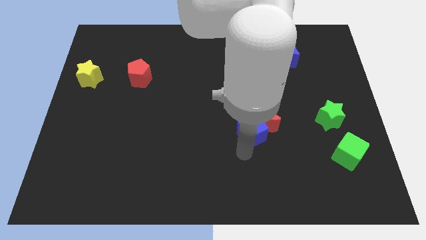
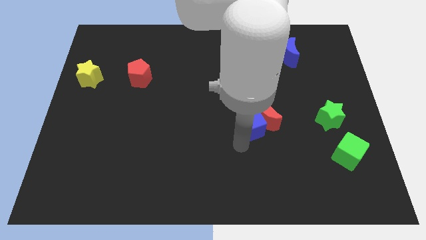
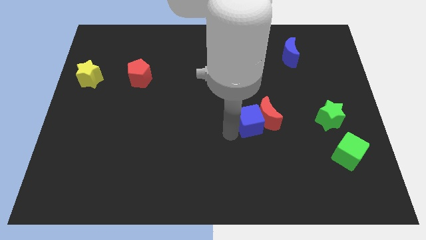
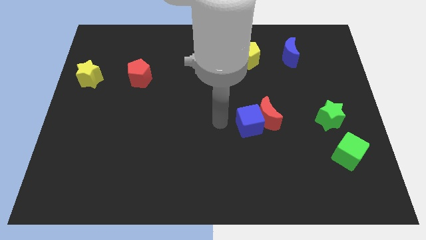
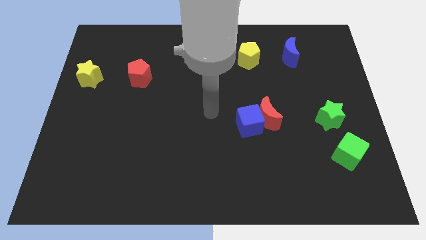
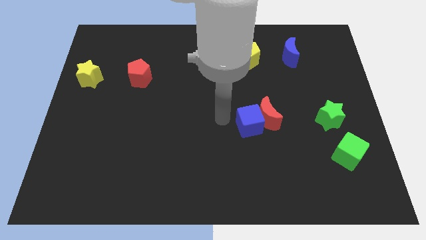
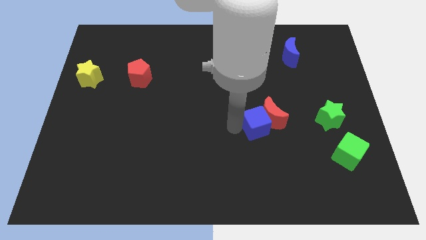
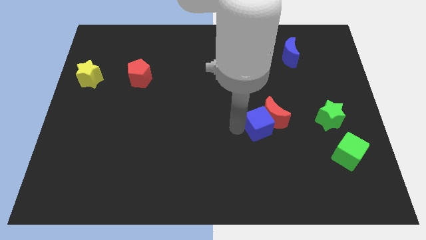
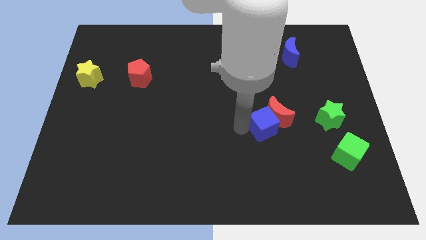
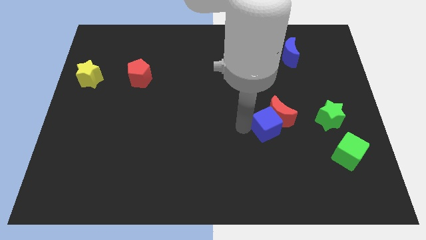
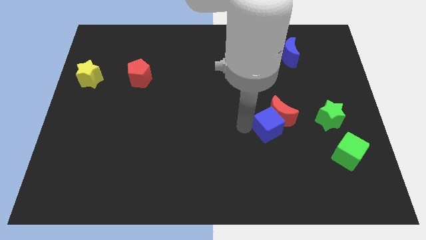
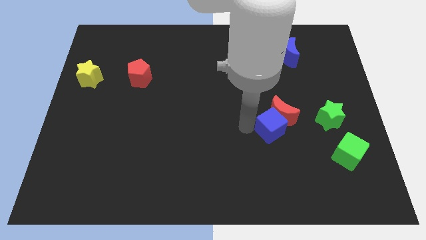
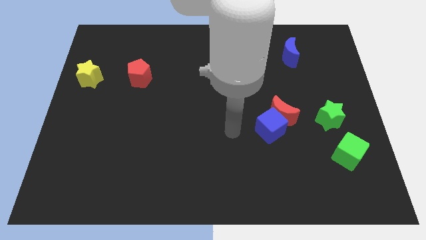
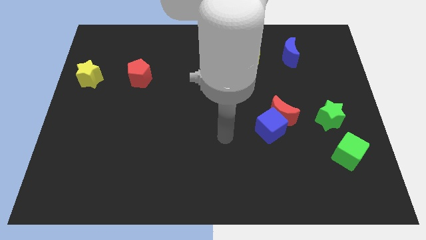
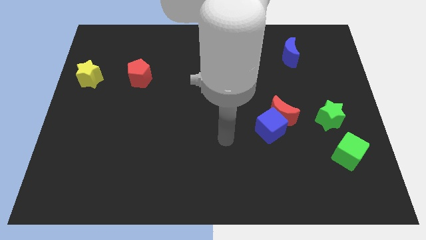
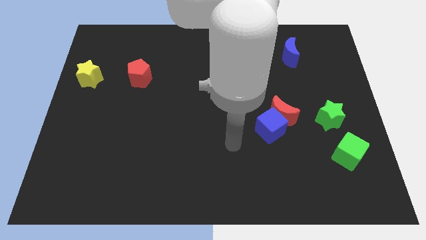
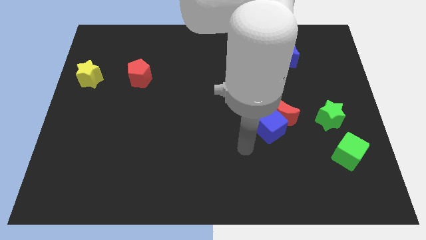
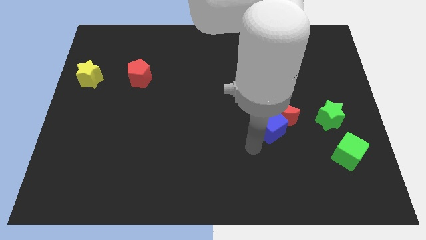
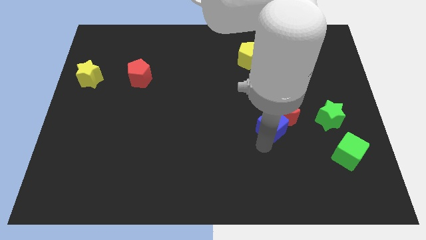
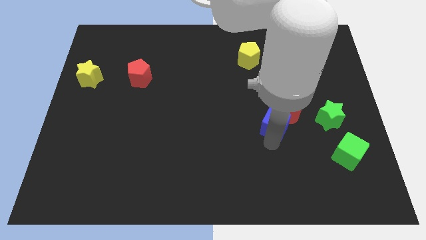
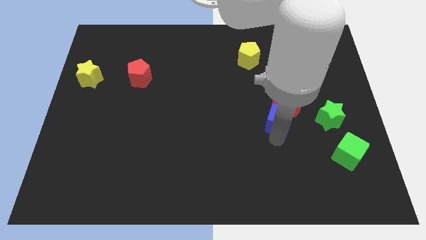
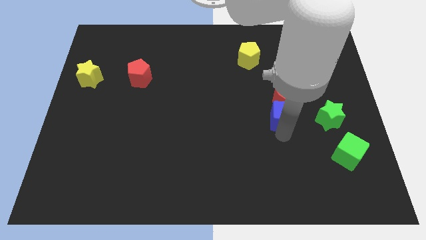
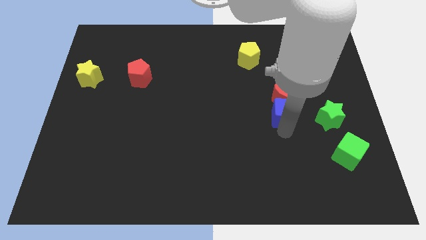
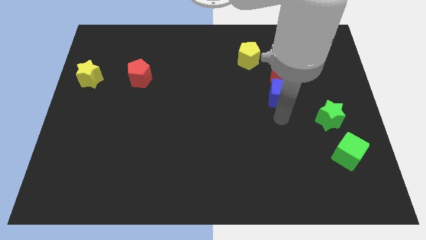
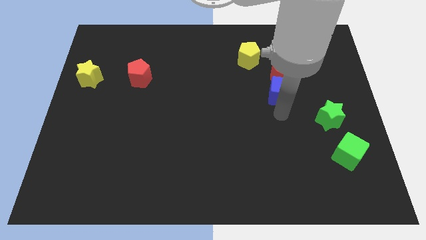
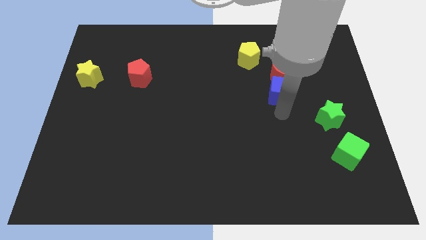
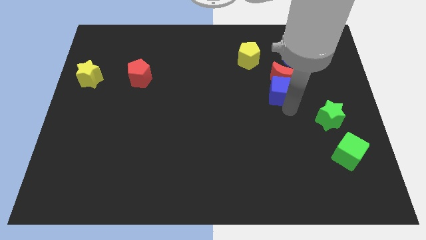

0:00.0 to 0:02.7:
push blue cube and red crescent towards the top side of the board

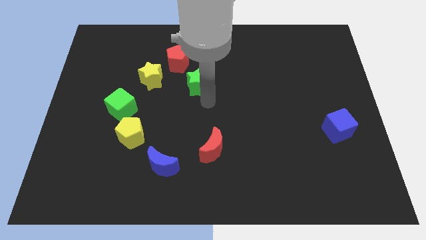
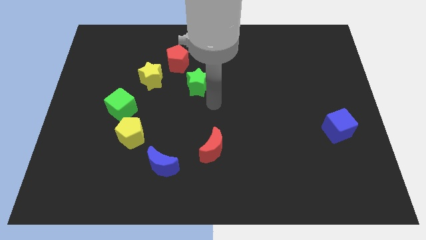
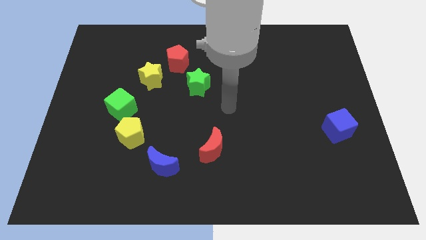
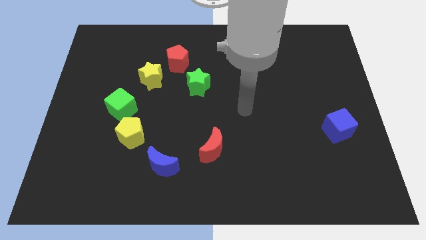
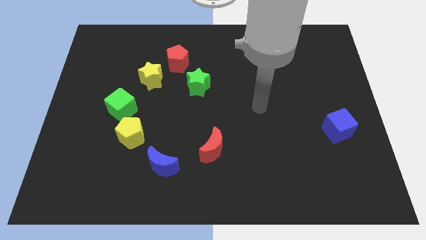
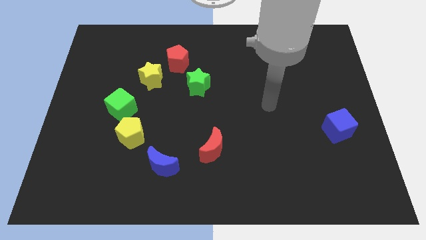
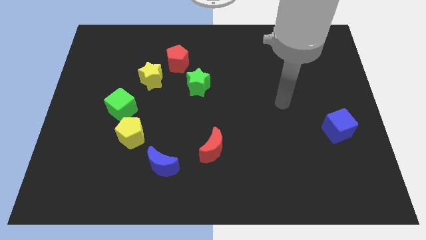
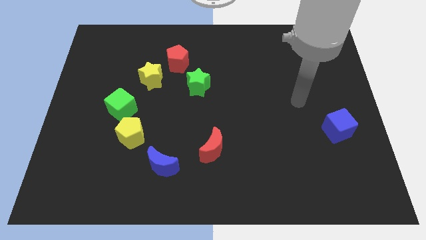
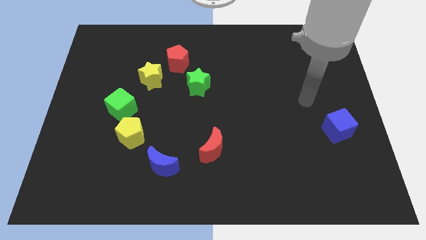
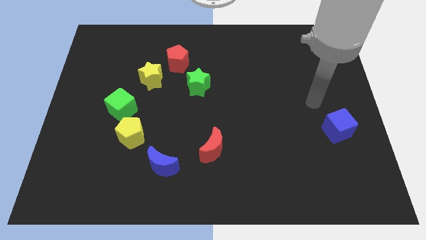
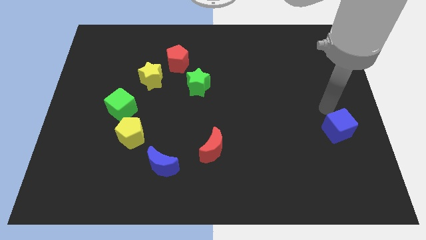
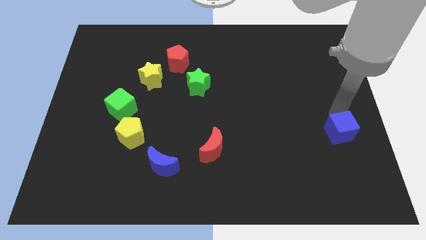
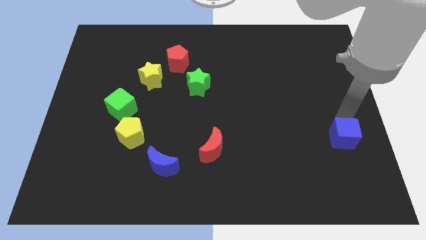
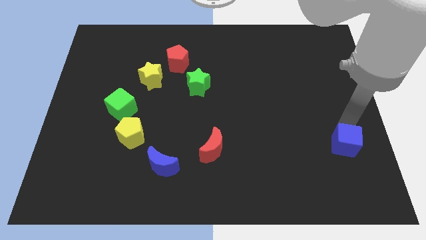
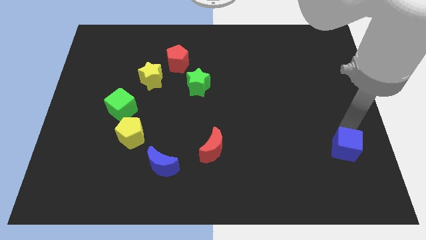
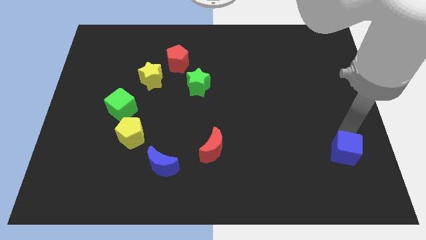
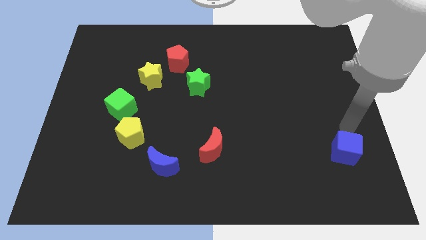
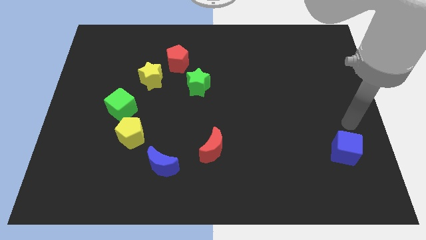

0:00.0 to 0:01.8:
move the blue cube slightly to the bottom

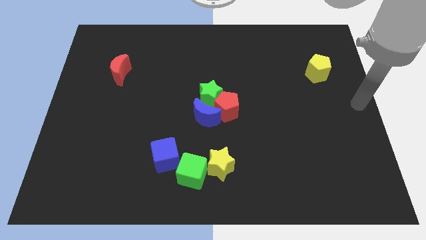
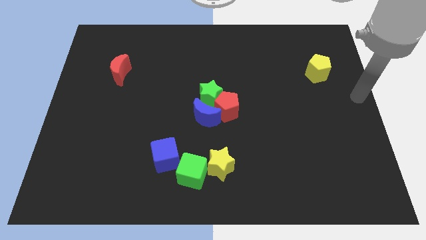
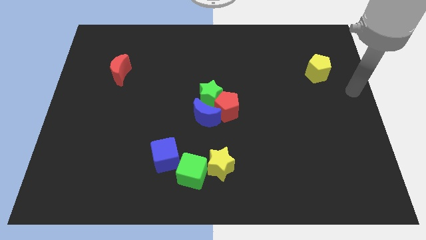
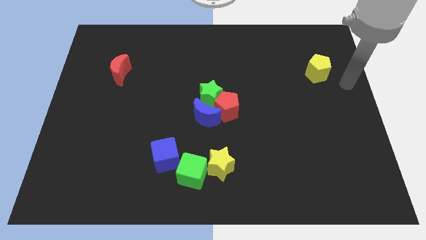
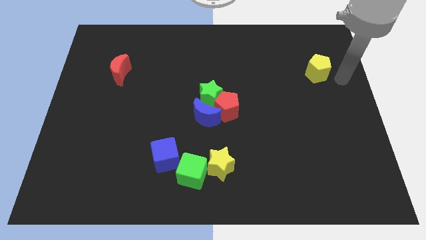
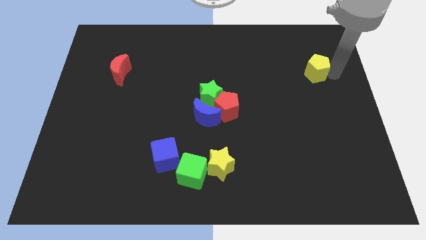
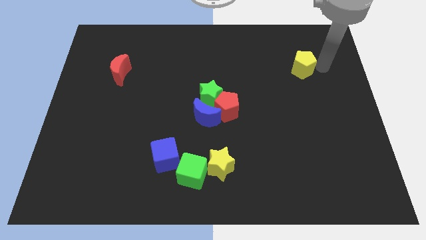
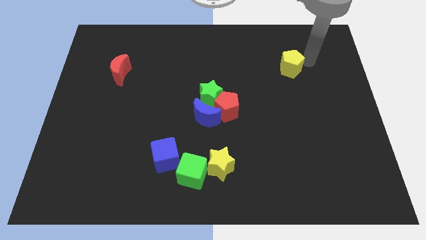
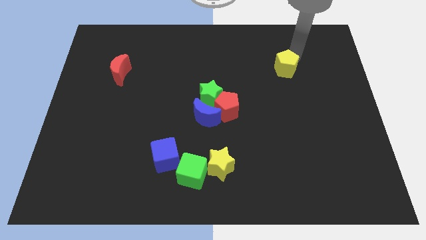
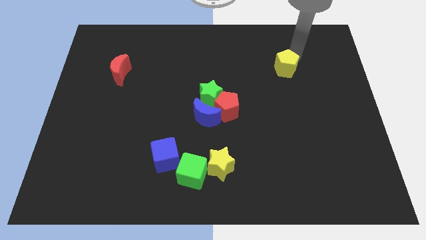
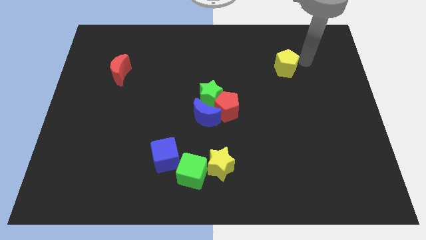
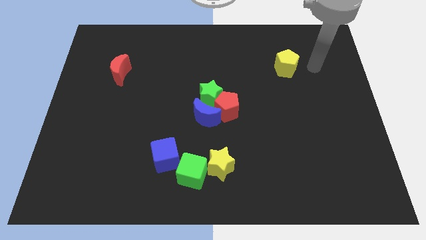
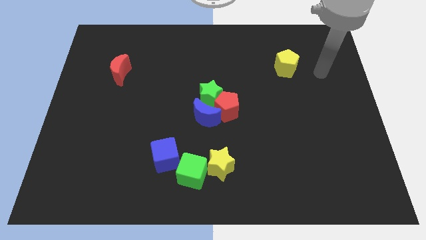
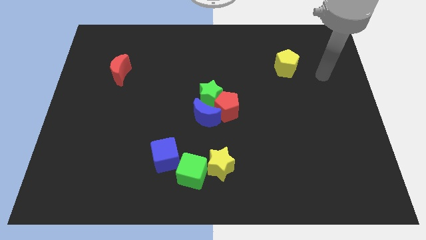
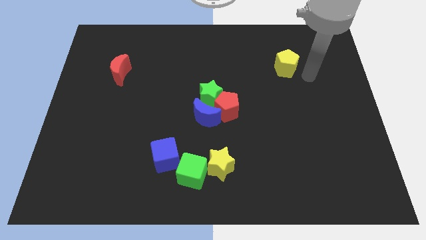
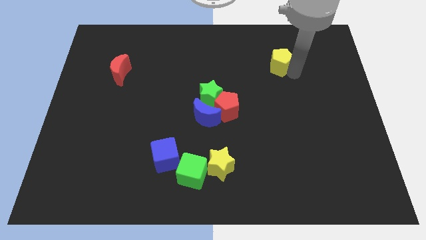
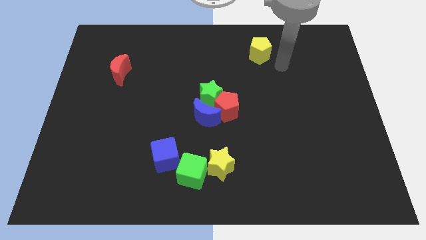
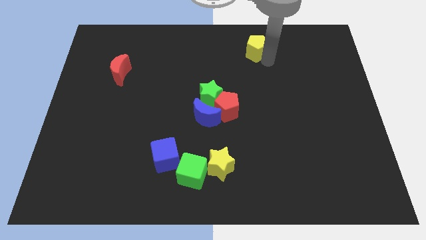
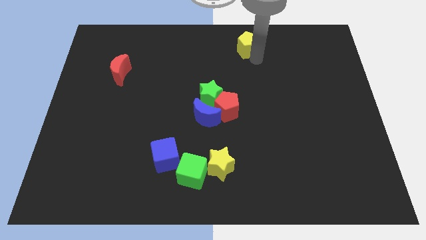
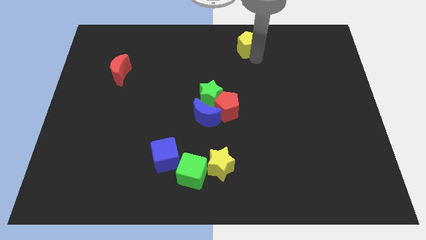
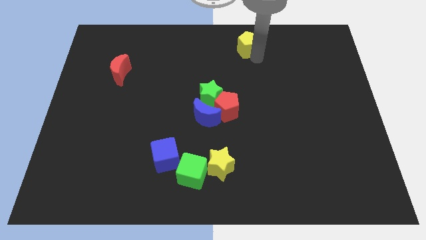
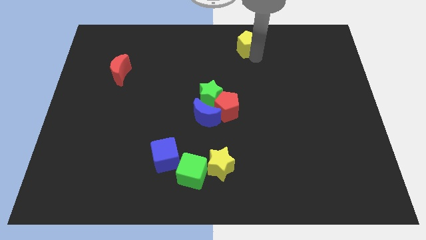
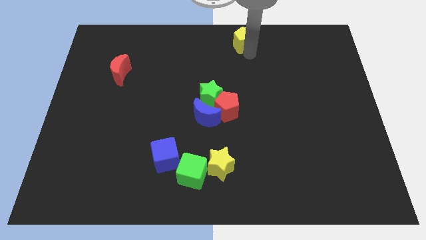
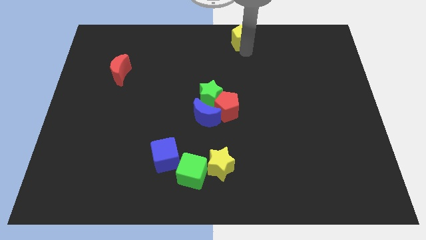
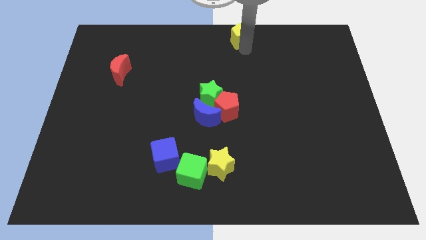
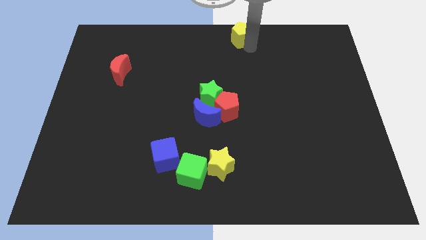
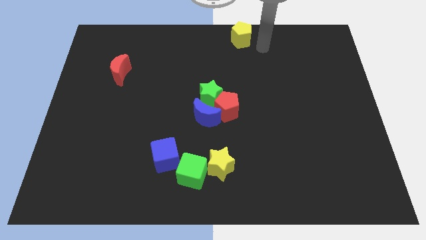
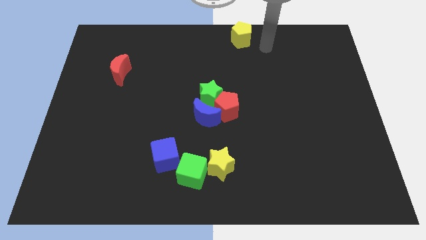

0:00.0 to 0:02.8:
push yellow pentagon to the top center of the board

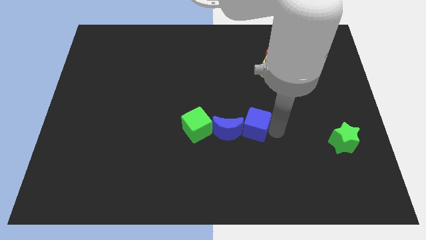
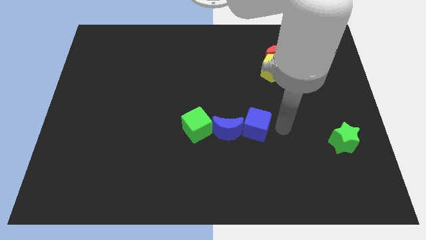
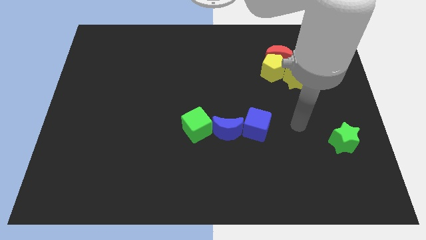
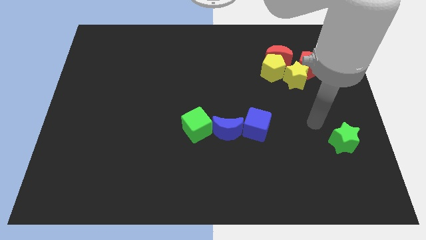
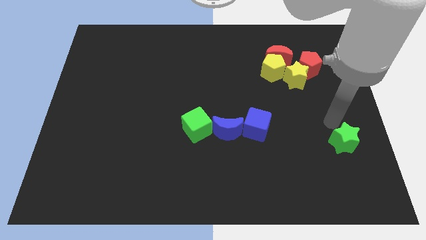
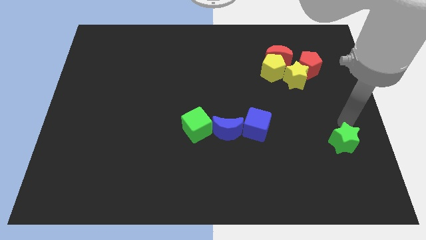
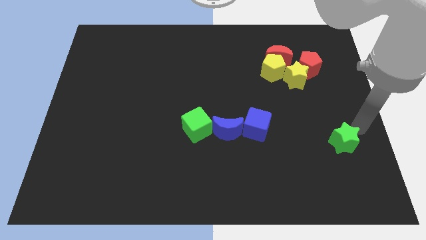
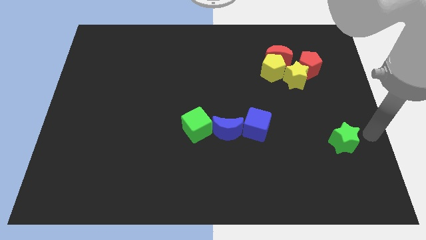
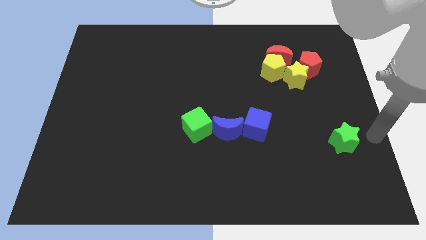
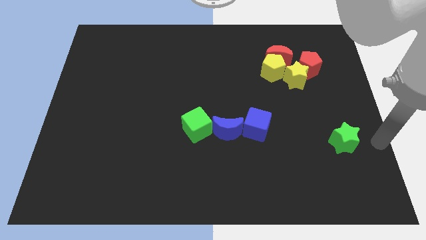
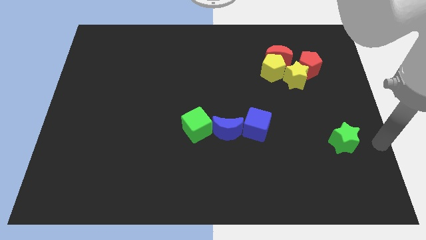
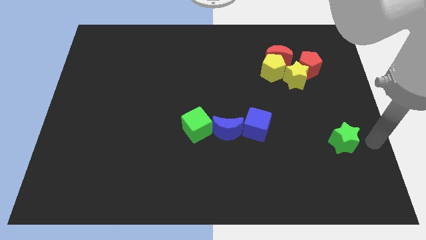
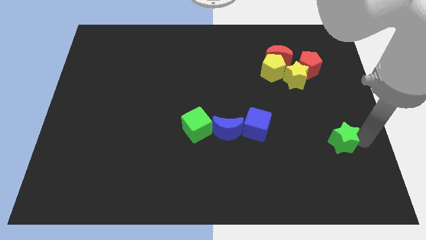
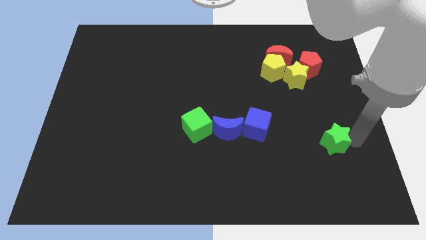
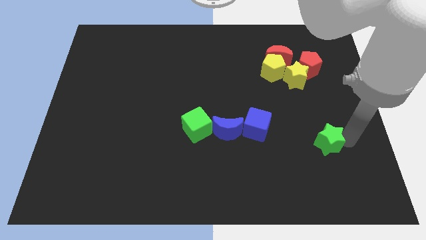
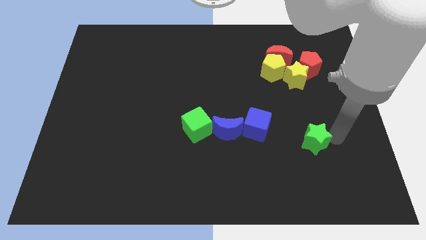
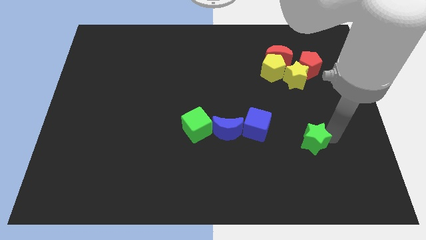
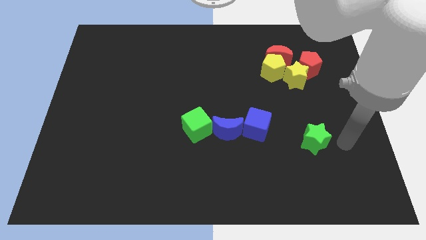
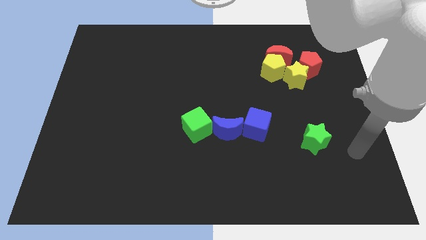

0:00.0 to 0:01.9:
push the green star towards the blue cube
